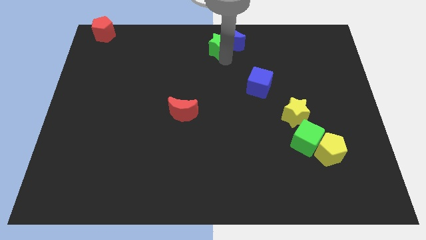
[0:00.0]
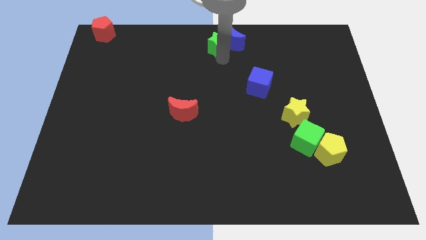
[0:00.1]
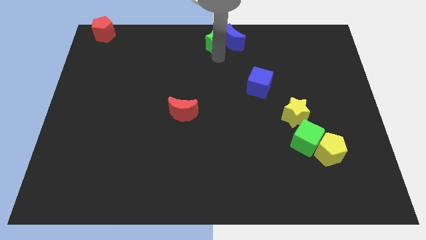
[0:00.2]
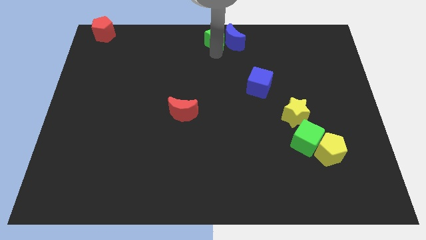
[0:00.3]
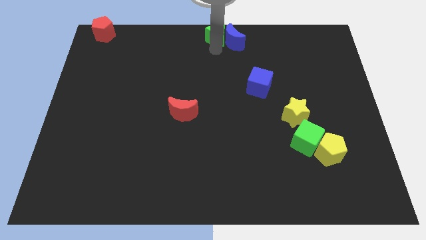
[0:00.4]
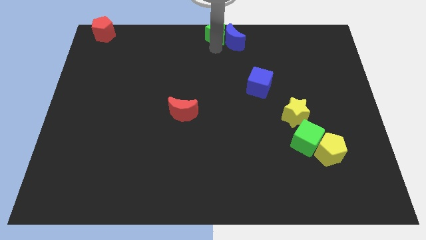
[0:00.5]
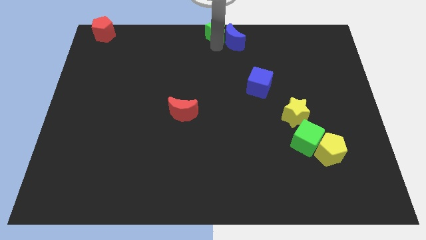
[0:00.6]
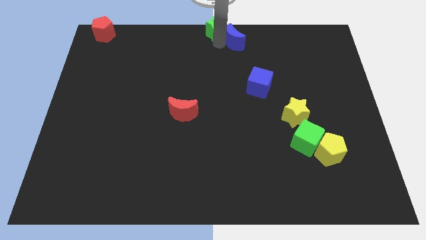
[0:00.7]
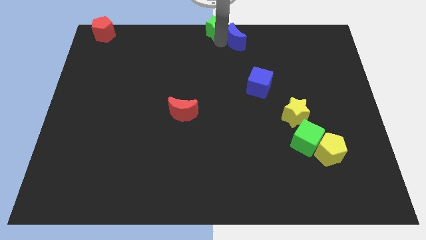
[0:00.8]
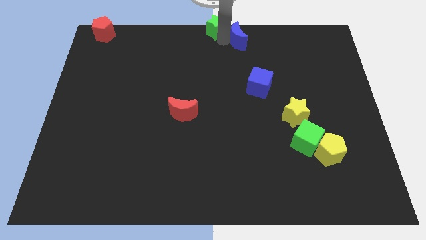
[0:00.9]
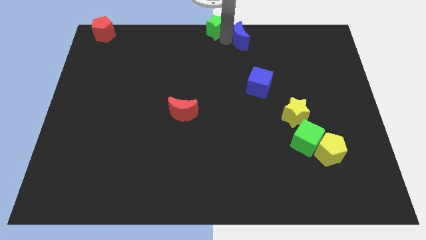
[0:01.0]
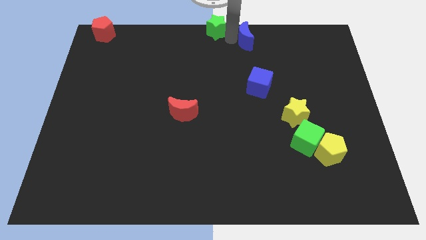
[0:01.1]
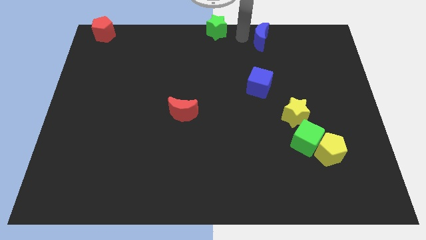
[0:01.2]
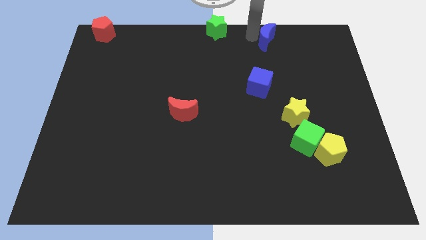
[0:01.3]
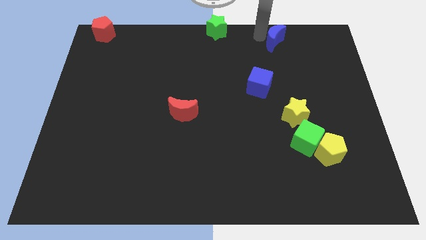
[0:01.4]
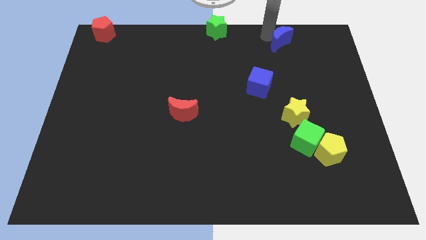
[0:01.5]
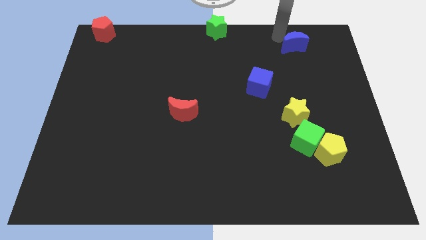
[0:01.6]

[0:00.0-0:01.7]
separate the green star and the blue moon

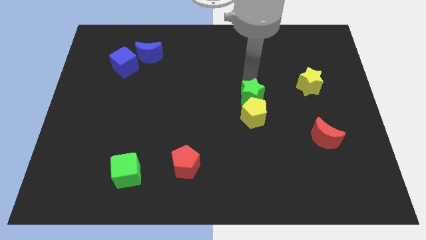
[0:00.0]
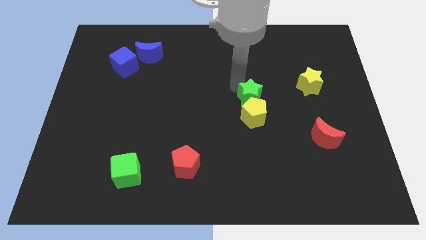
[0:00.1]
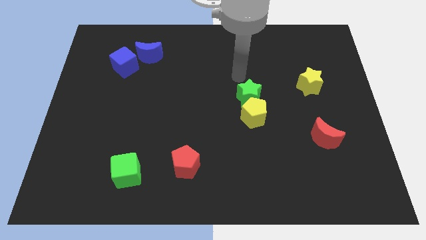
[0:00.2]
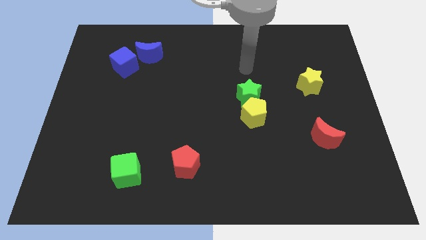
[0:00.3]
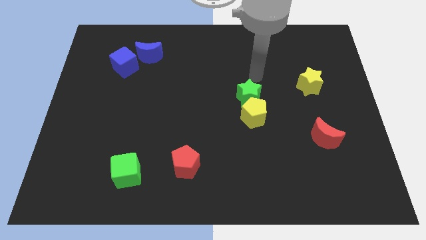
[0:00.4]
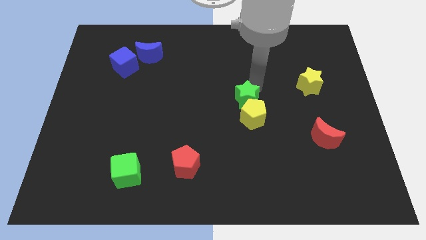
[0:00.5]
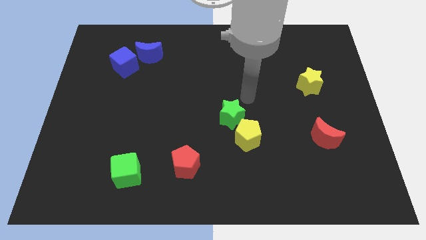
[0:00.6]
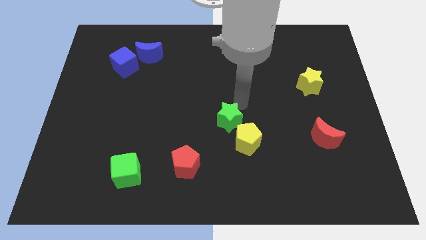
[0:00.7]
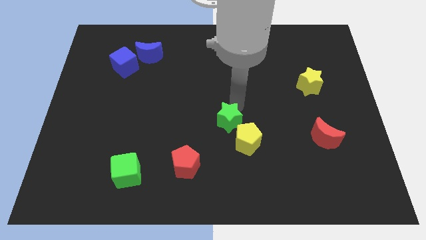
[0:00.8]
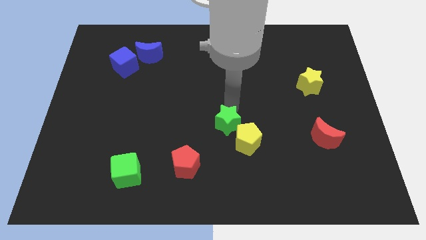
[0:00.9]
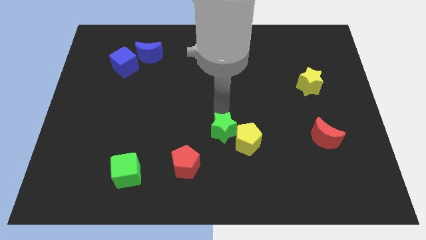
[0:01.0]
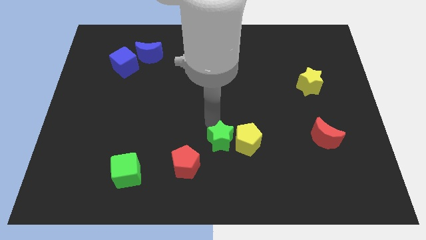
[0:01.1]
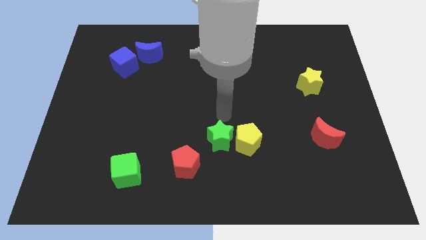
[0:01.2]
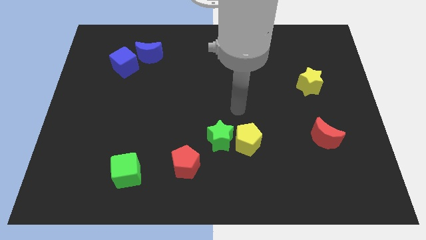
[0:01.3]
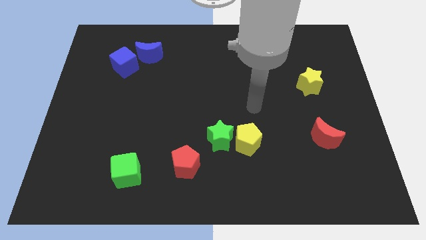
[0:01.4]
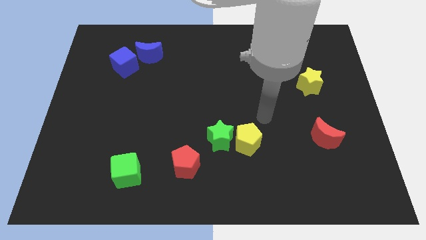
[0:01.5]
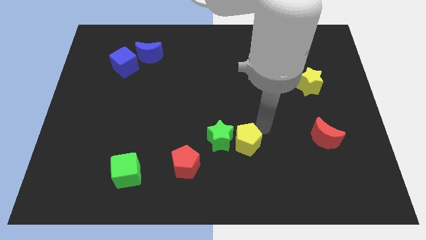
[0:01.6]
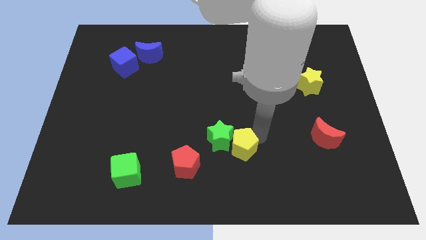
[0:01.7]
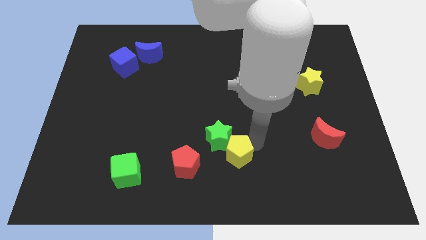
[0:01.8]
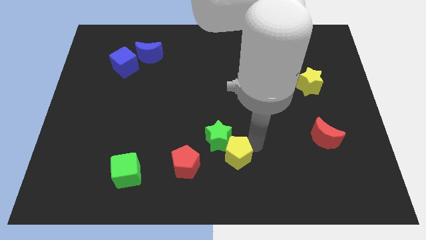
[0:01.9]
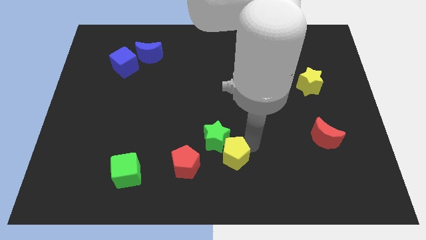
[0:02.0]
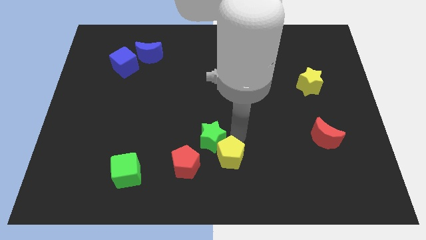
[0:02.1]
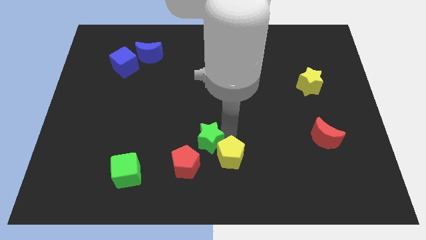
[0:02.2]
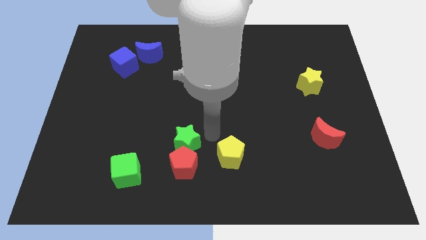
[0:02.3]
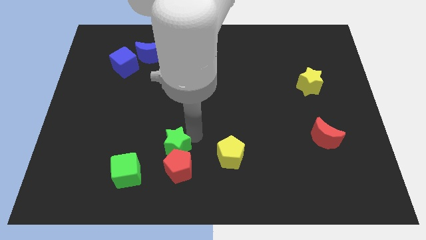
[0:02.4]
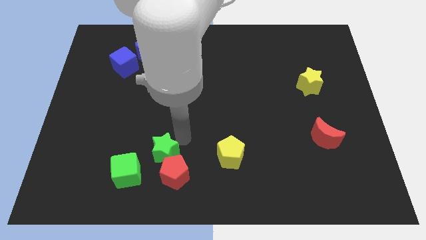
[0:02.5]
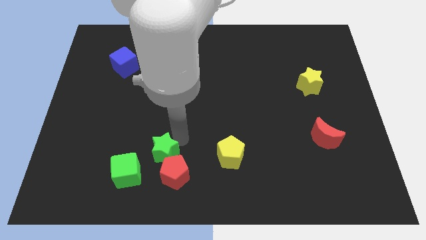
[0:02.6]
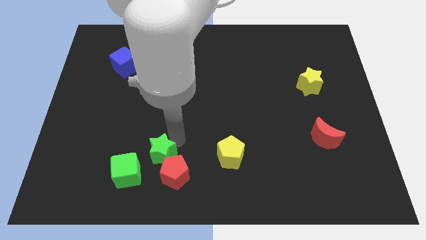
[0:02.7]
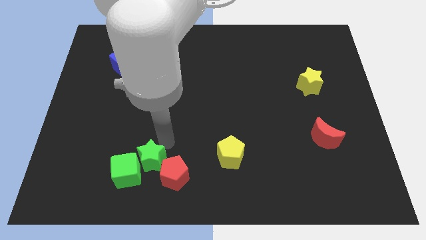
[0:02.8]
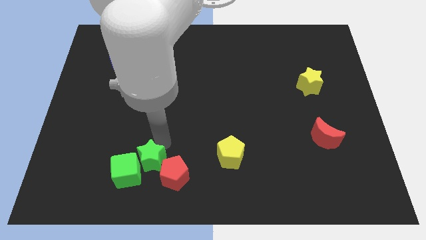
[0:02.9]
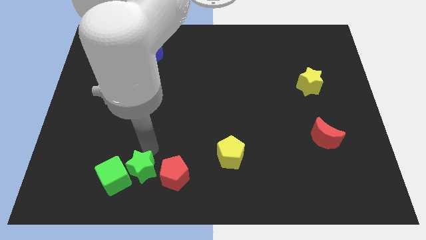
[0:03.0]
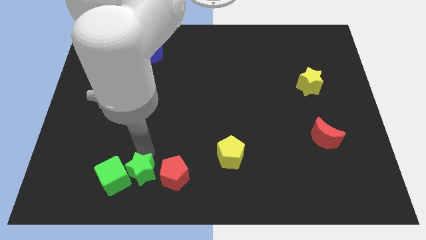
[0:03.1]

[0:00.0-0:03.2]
place the green star in between the green cube and red pentagon

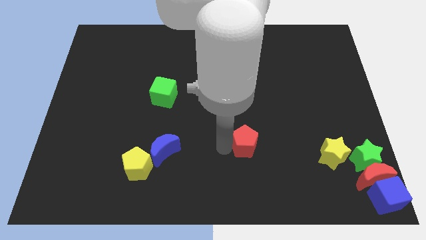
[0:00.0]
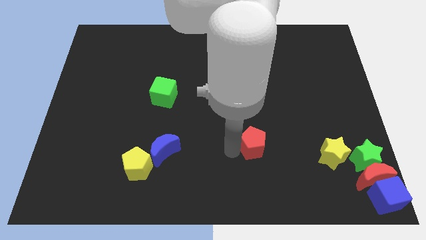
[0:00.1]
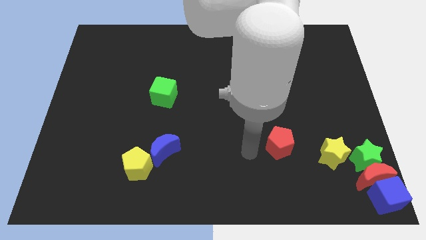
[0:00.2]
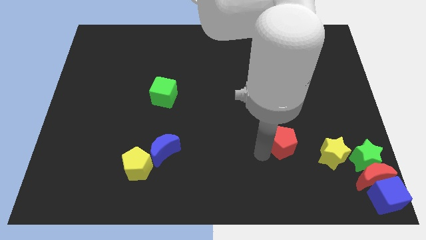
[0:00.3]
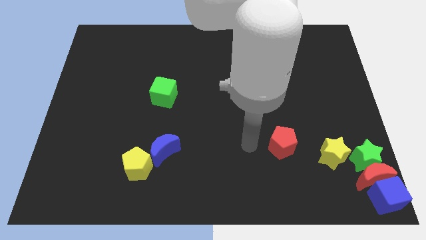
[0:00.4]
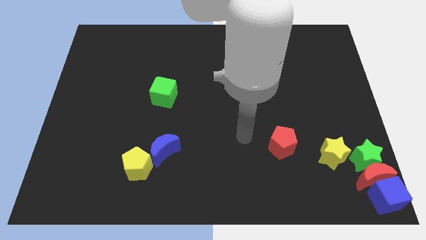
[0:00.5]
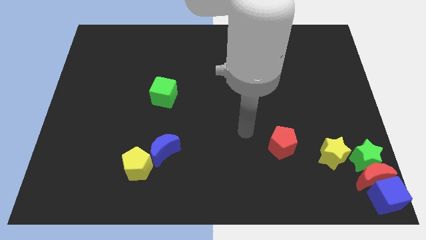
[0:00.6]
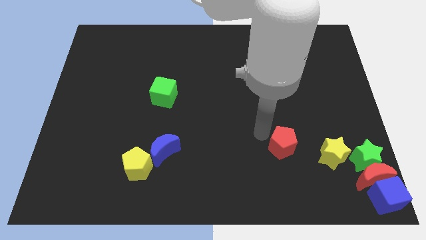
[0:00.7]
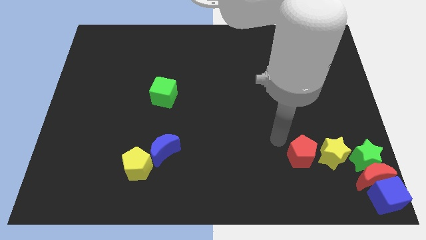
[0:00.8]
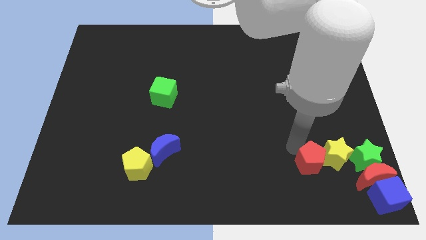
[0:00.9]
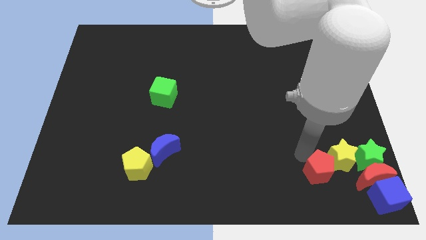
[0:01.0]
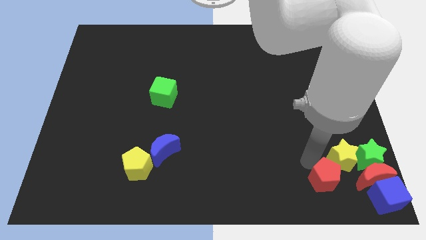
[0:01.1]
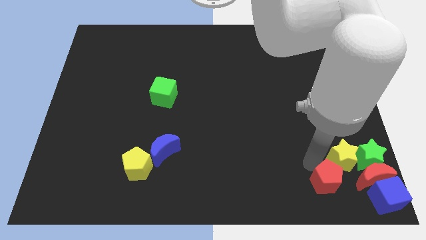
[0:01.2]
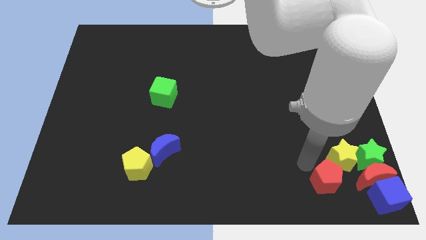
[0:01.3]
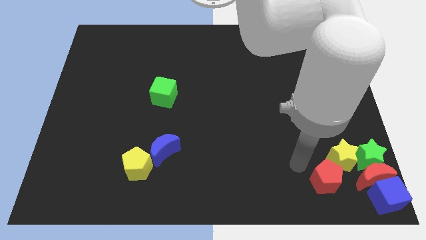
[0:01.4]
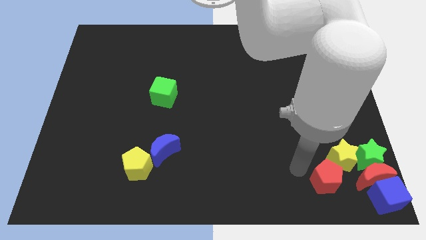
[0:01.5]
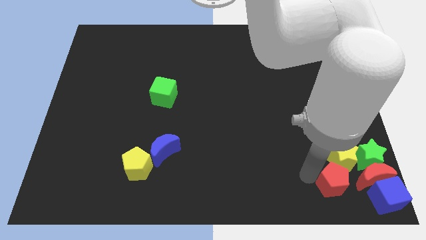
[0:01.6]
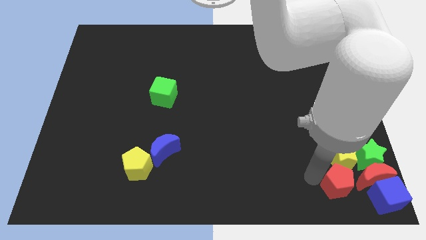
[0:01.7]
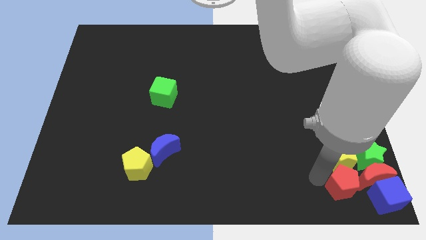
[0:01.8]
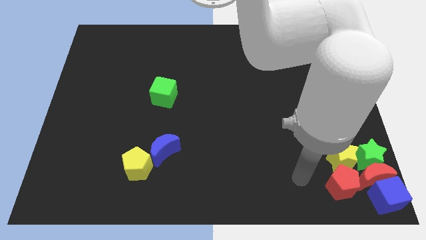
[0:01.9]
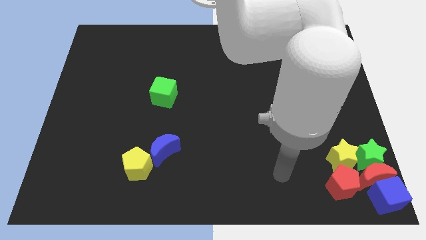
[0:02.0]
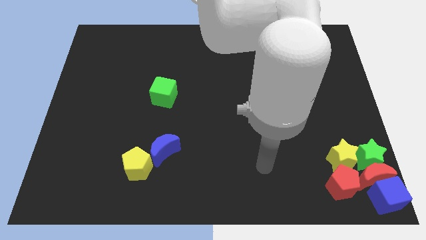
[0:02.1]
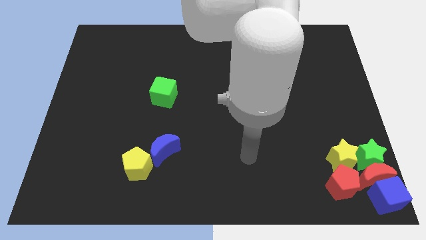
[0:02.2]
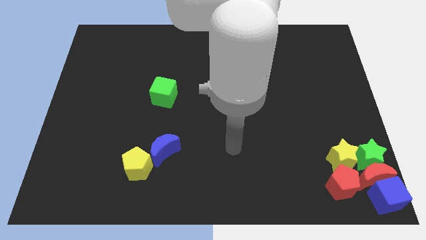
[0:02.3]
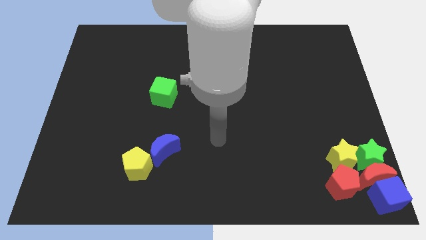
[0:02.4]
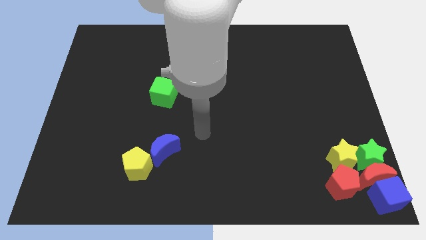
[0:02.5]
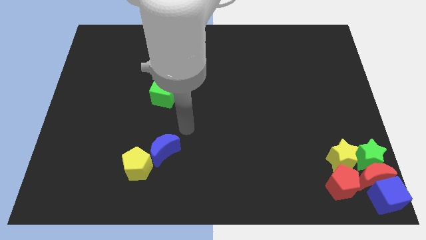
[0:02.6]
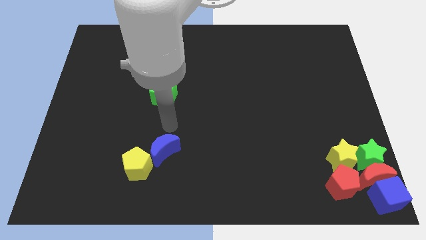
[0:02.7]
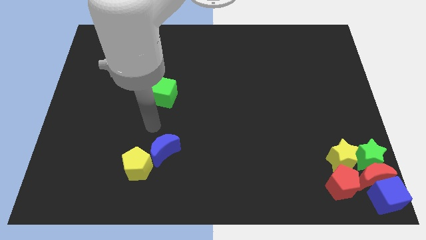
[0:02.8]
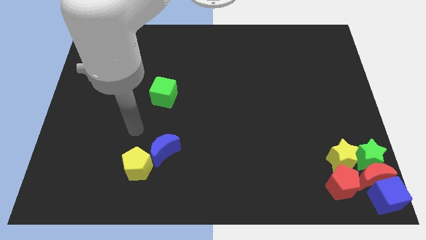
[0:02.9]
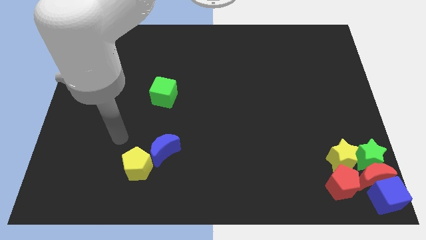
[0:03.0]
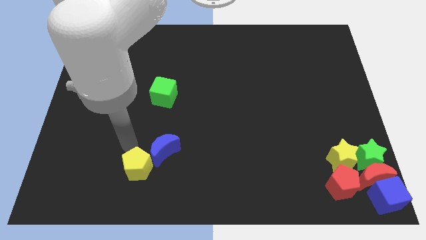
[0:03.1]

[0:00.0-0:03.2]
move the red pentagon below to the yellow star

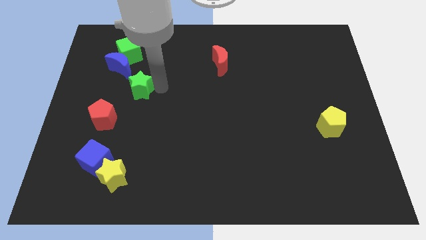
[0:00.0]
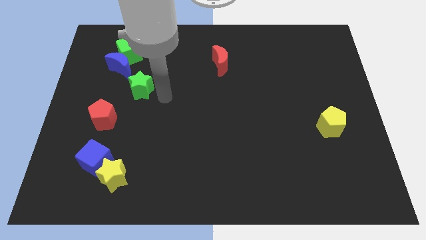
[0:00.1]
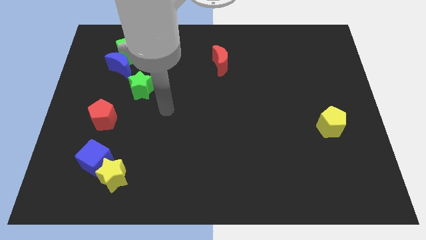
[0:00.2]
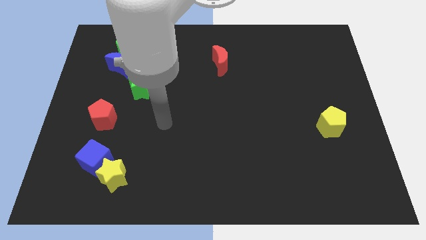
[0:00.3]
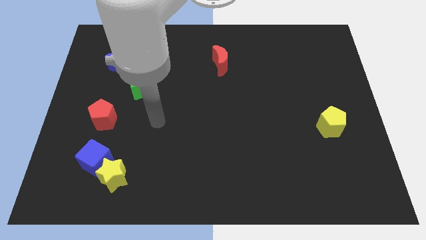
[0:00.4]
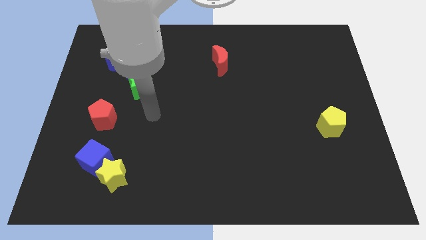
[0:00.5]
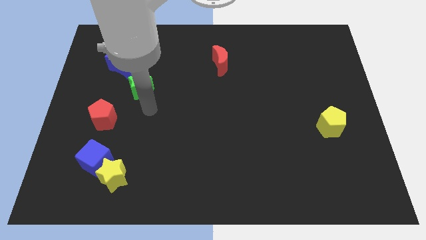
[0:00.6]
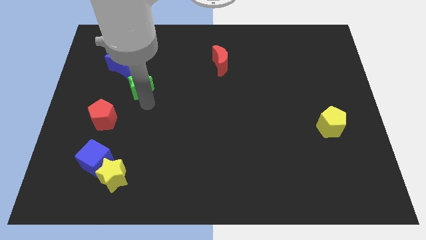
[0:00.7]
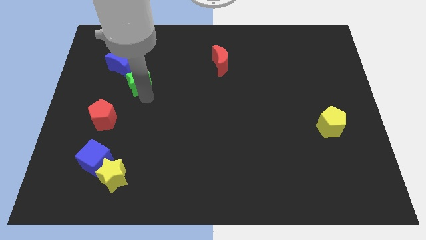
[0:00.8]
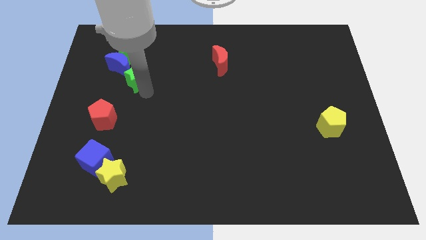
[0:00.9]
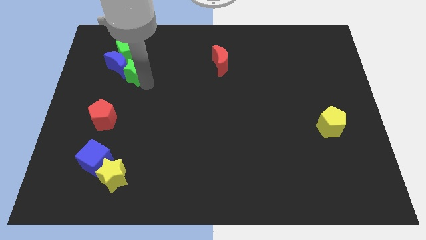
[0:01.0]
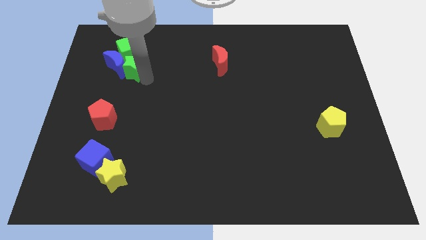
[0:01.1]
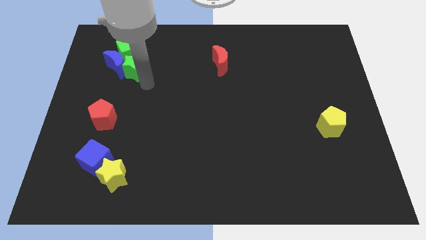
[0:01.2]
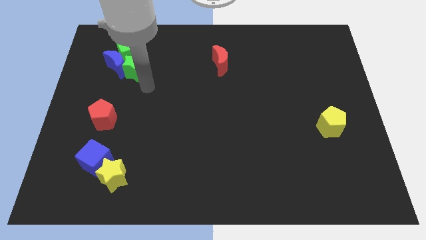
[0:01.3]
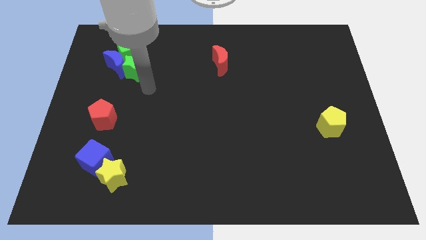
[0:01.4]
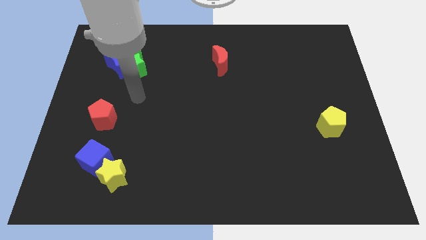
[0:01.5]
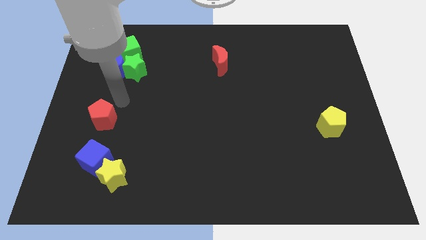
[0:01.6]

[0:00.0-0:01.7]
slide the green star close to blue moon
